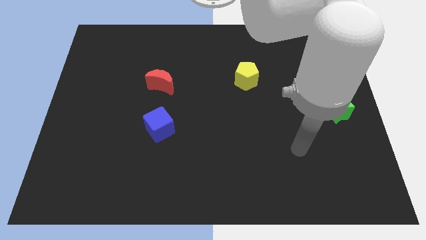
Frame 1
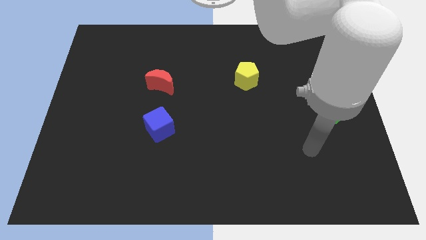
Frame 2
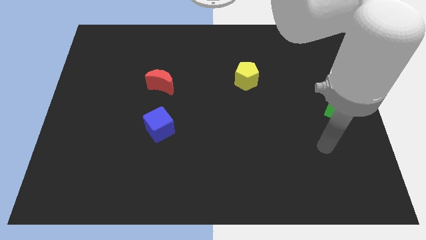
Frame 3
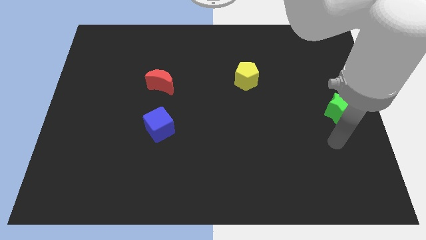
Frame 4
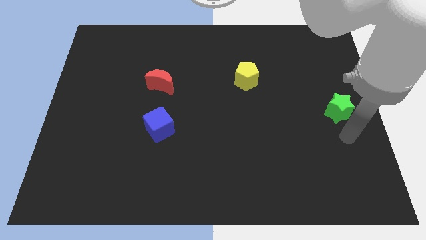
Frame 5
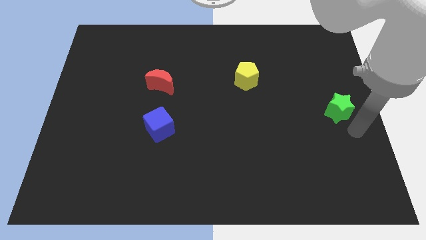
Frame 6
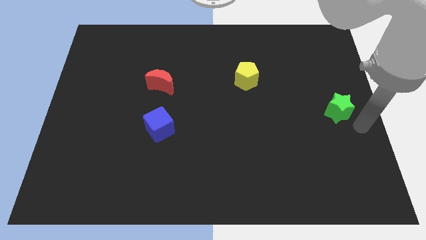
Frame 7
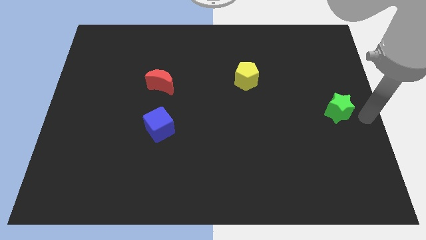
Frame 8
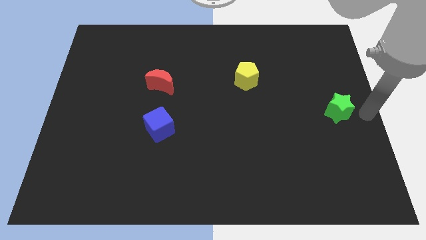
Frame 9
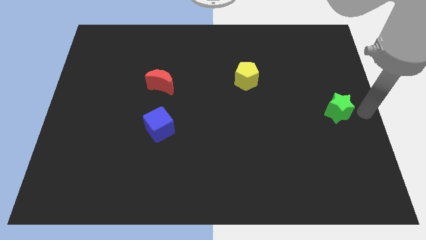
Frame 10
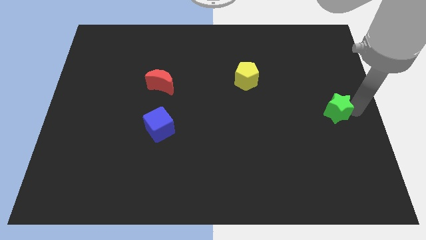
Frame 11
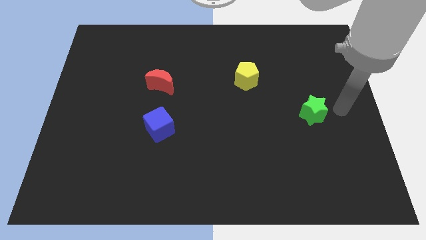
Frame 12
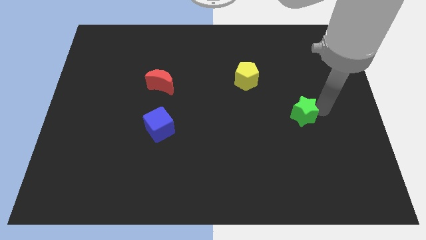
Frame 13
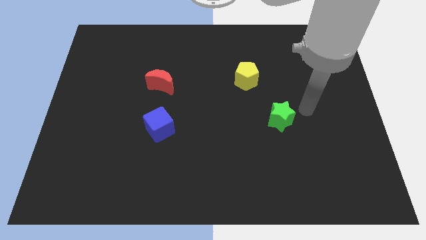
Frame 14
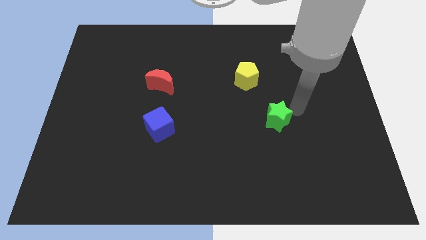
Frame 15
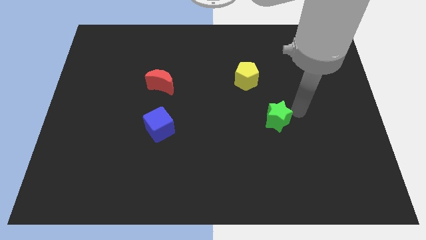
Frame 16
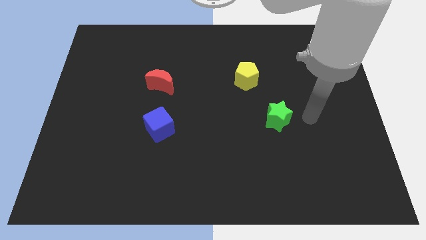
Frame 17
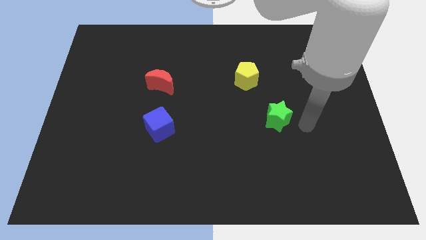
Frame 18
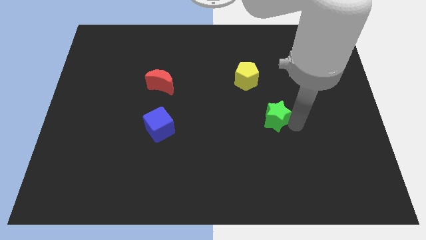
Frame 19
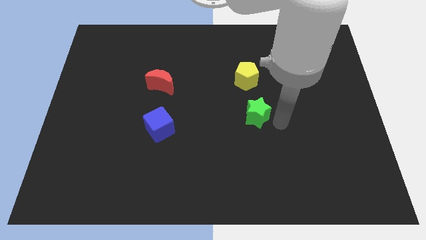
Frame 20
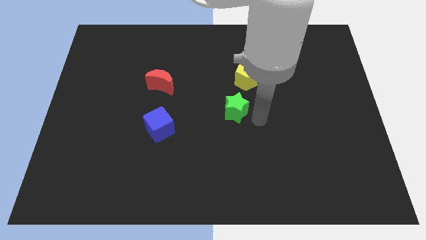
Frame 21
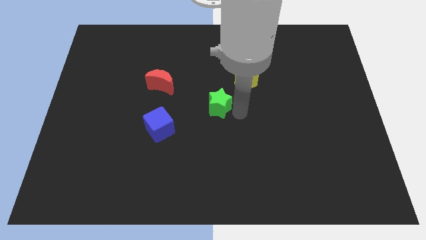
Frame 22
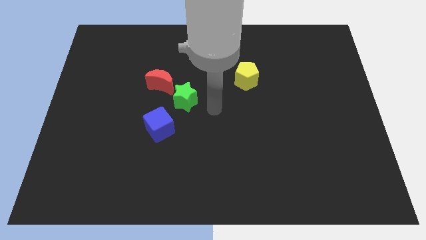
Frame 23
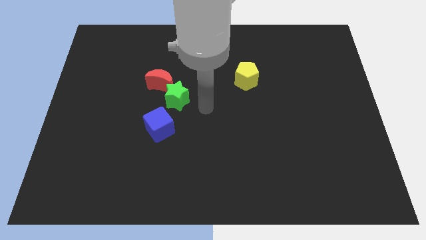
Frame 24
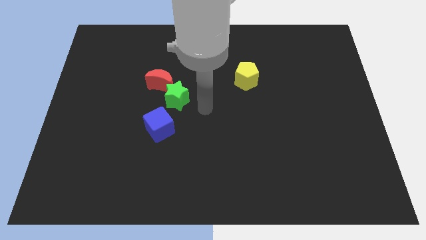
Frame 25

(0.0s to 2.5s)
slide the green star towards the red moon

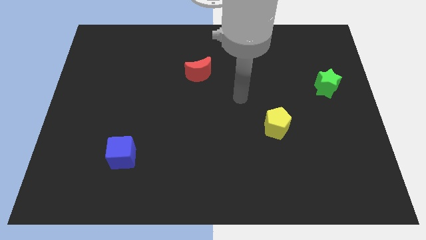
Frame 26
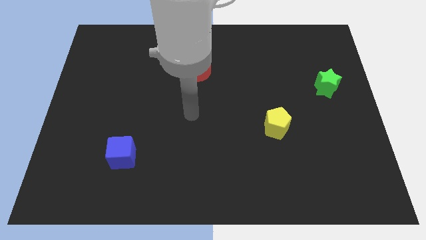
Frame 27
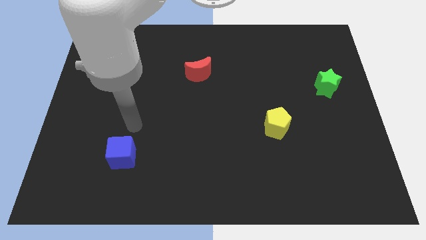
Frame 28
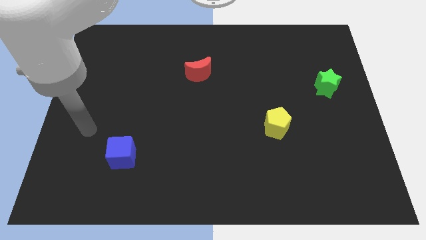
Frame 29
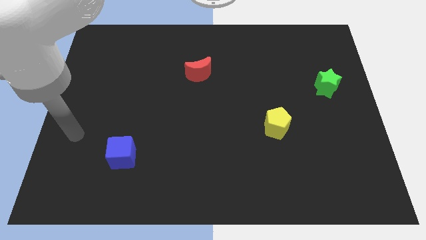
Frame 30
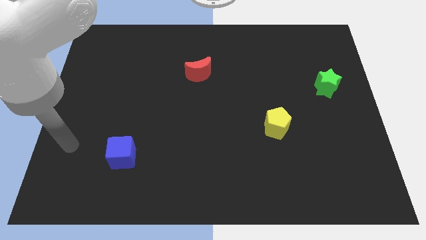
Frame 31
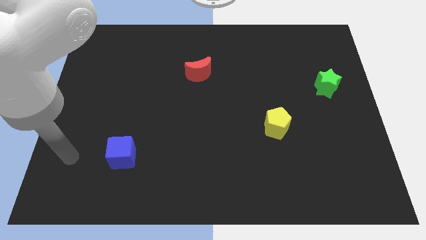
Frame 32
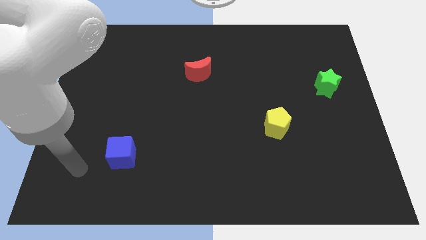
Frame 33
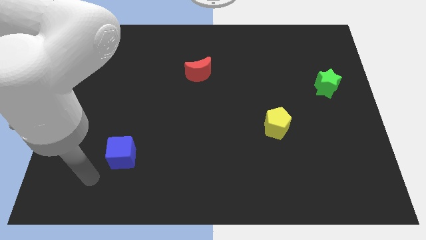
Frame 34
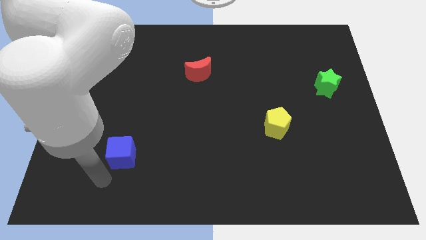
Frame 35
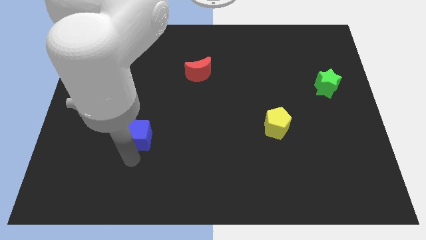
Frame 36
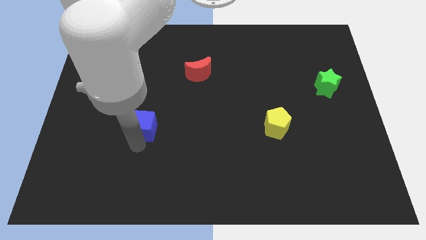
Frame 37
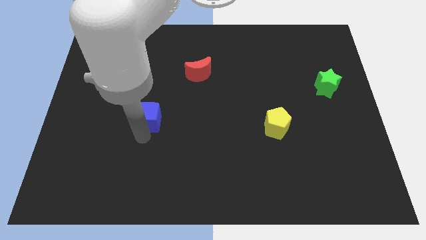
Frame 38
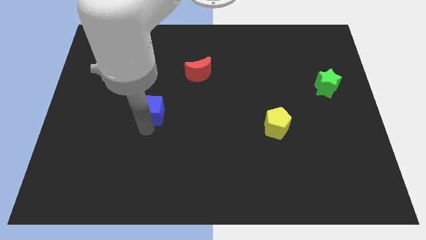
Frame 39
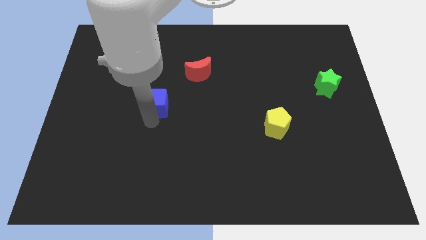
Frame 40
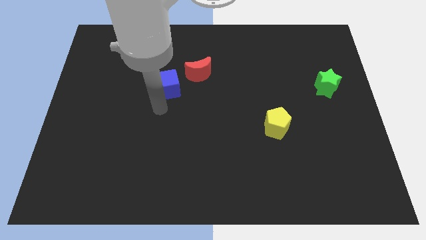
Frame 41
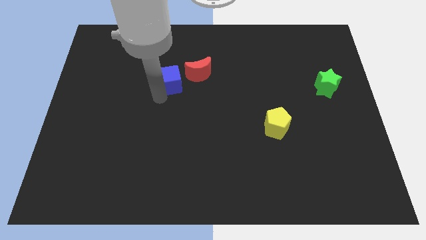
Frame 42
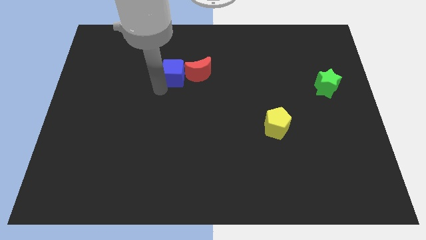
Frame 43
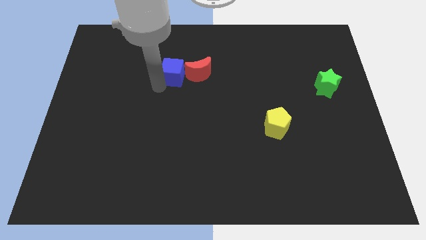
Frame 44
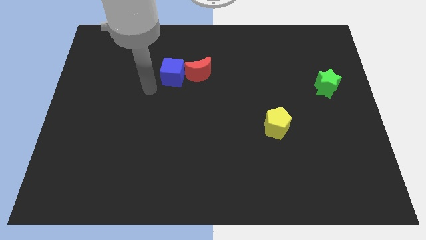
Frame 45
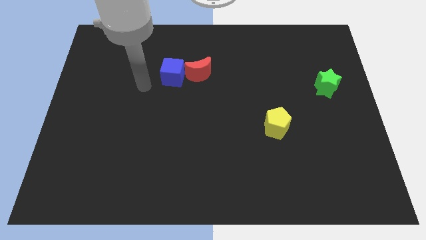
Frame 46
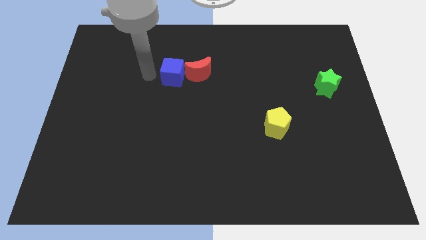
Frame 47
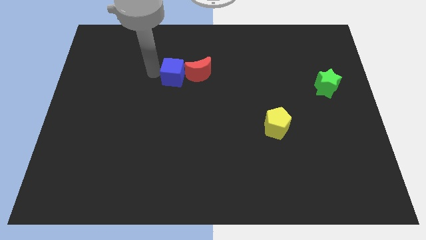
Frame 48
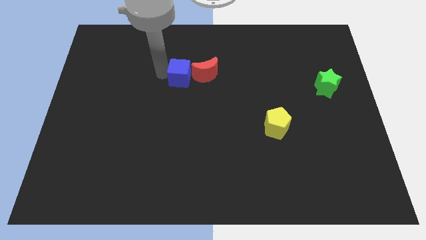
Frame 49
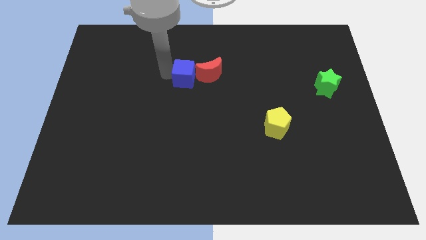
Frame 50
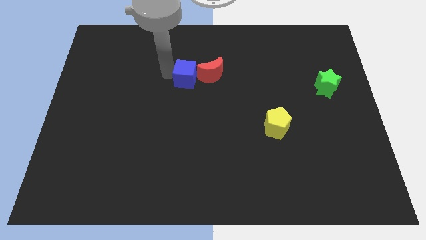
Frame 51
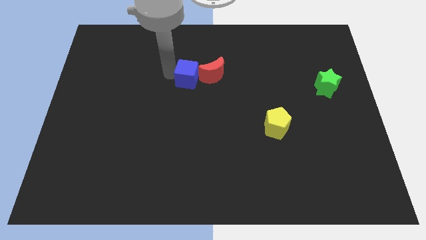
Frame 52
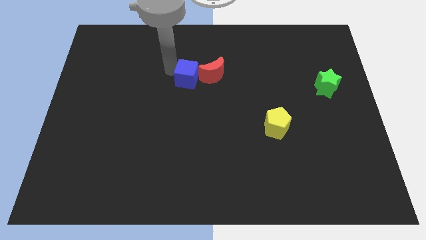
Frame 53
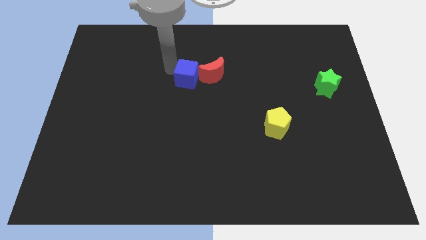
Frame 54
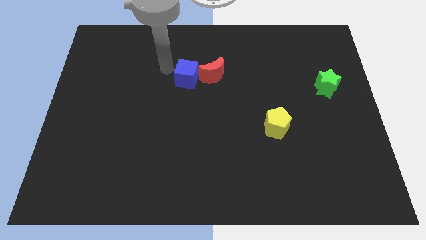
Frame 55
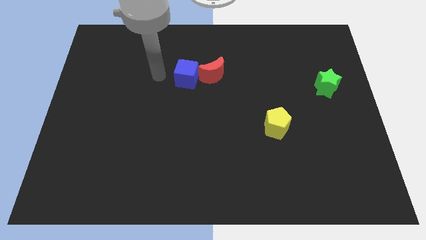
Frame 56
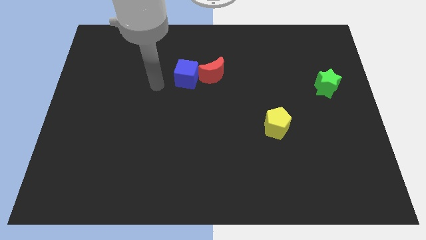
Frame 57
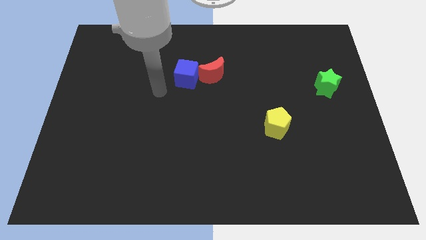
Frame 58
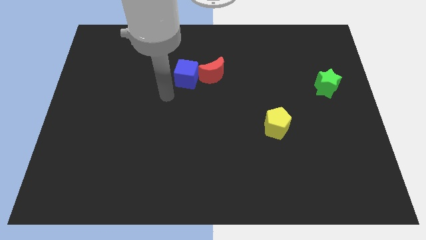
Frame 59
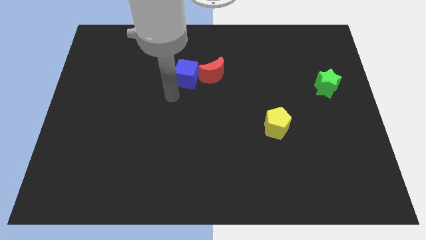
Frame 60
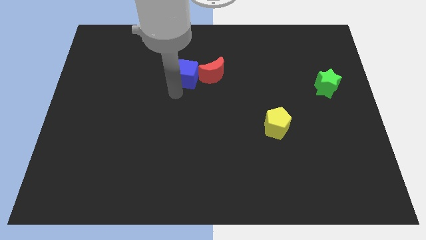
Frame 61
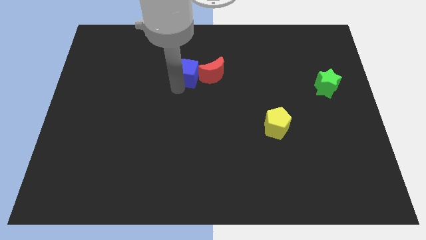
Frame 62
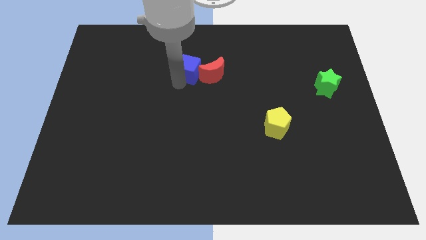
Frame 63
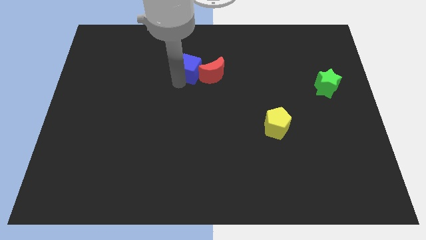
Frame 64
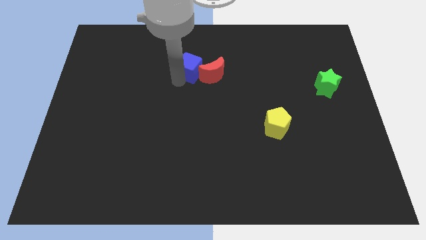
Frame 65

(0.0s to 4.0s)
put the blue cube next to the moon

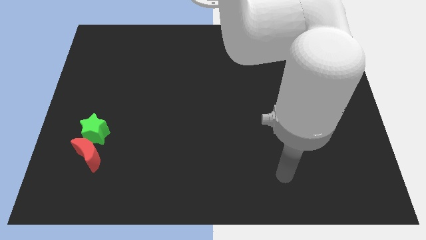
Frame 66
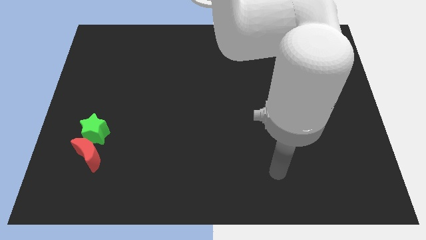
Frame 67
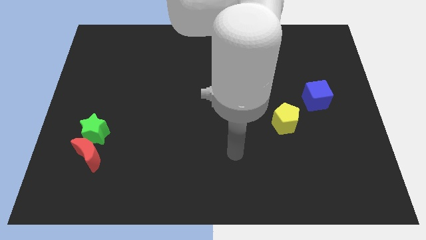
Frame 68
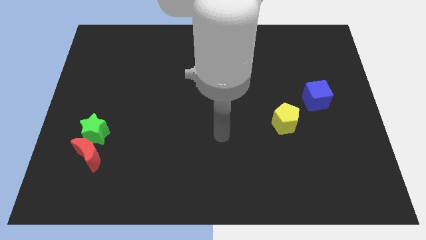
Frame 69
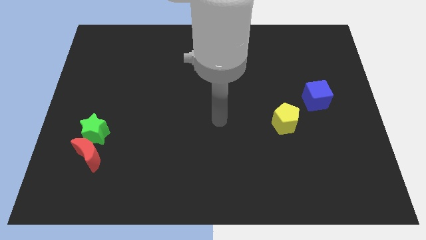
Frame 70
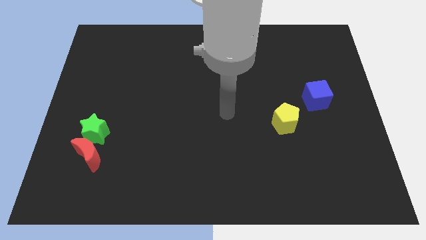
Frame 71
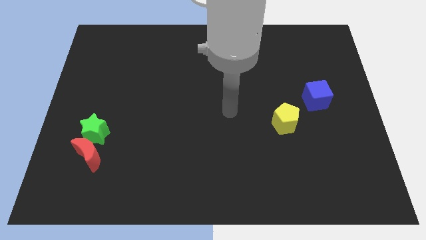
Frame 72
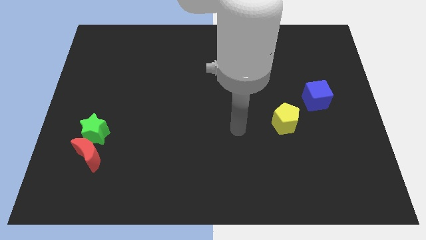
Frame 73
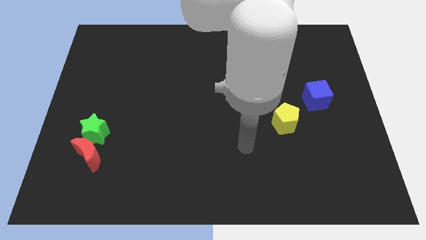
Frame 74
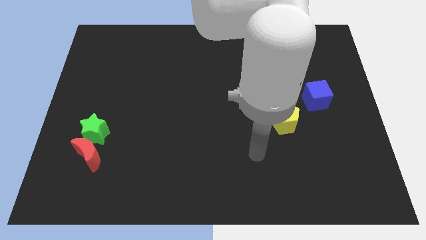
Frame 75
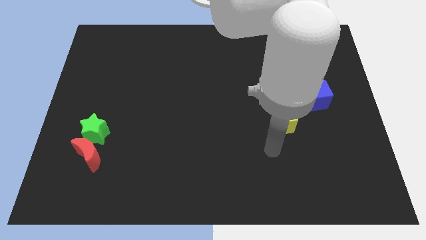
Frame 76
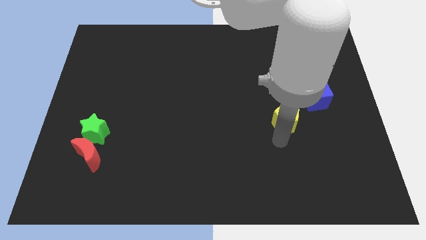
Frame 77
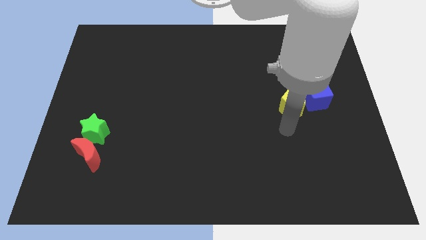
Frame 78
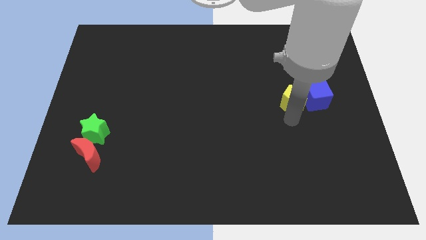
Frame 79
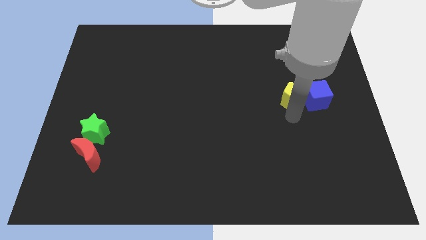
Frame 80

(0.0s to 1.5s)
slide the pentagon towards the blue cube

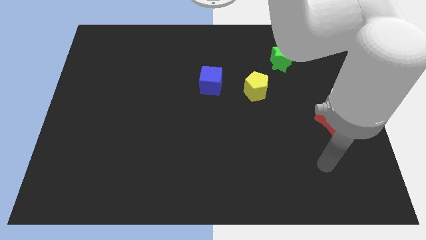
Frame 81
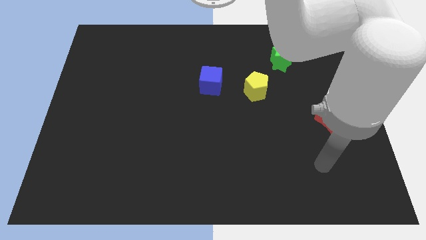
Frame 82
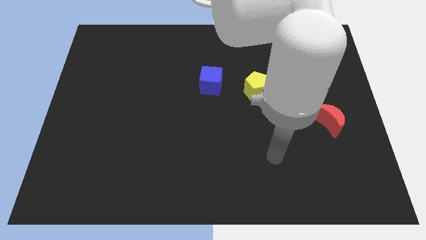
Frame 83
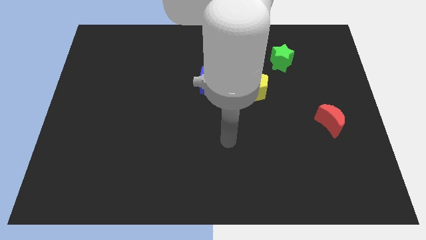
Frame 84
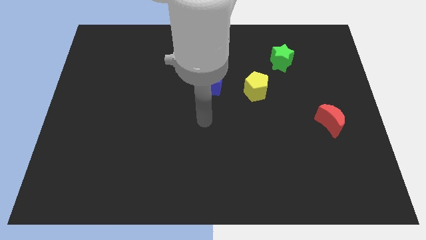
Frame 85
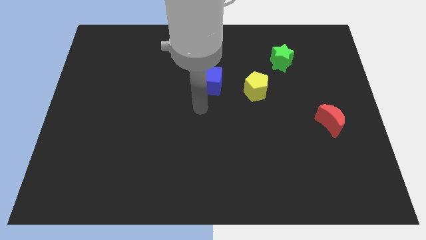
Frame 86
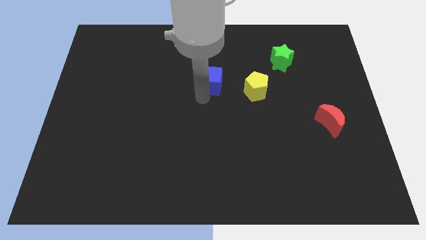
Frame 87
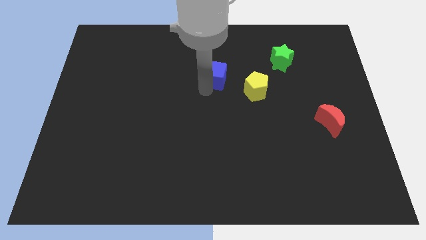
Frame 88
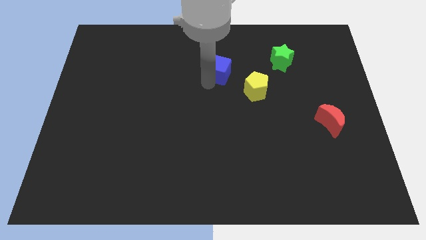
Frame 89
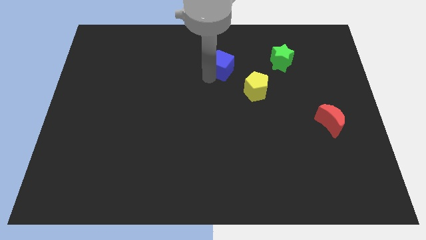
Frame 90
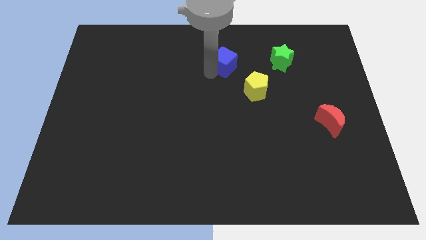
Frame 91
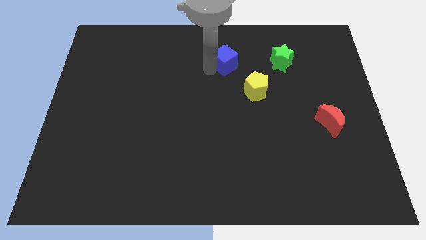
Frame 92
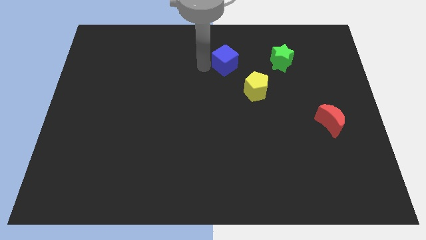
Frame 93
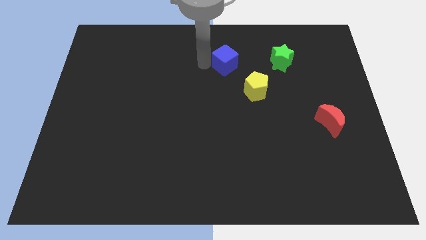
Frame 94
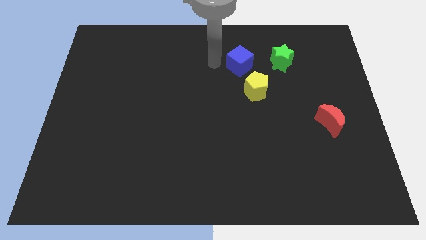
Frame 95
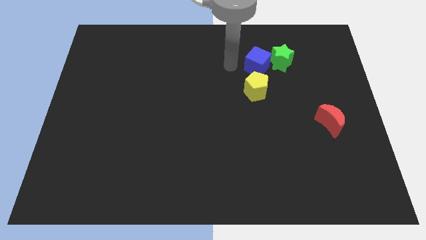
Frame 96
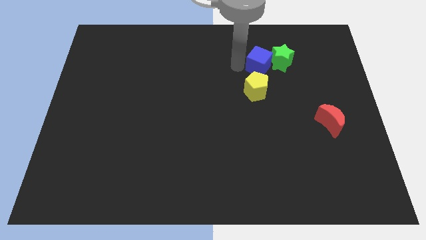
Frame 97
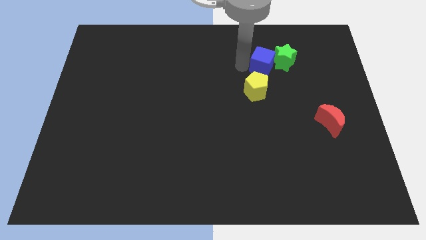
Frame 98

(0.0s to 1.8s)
push the cube towards the green star
